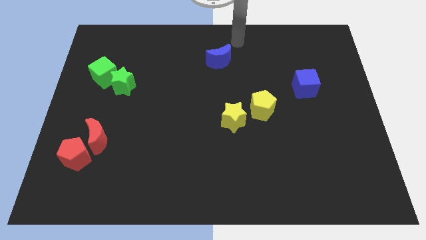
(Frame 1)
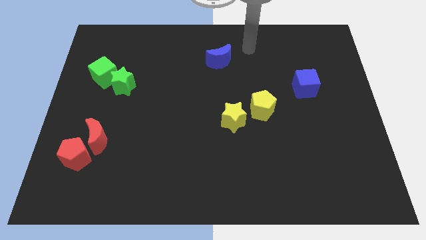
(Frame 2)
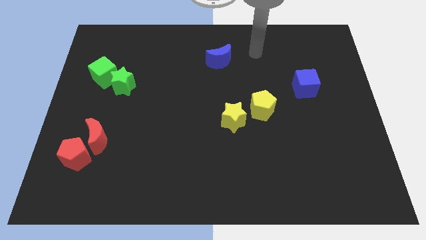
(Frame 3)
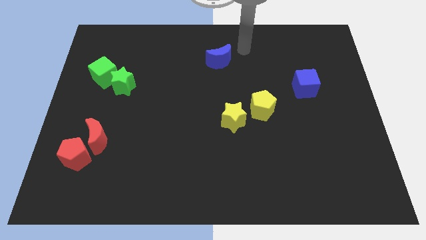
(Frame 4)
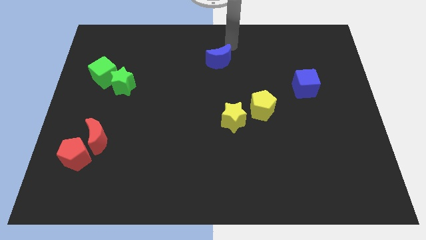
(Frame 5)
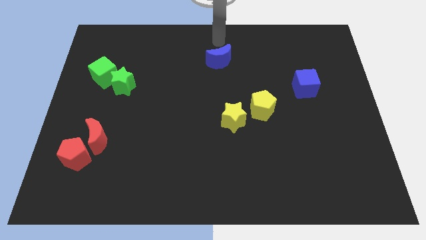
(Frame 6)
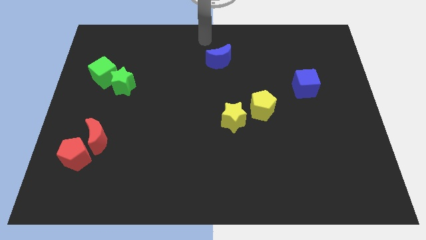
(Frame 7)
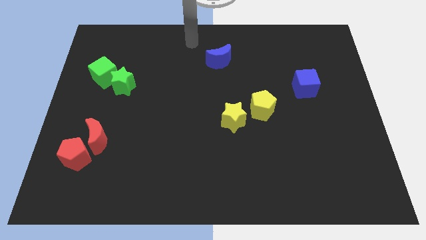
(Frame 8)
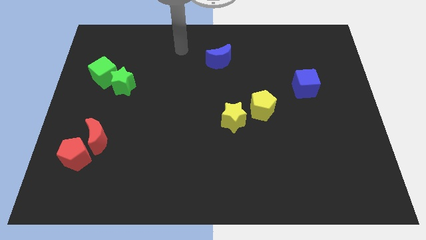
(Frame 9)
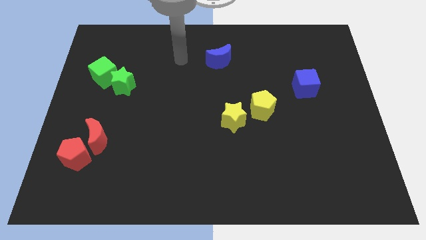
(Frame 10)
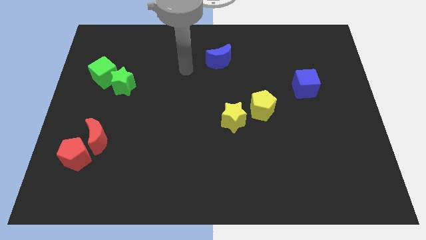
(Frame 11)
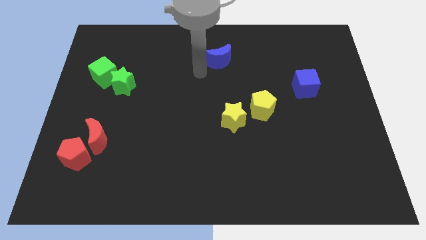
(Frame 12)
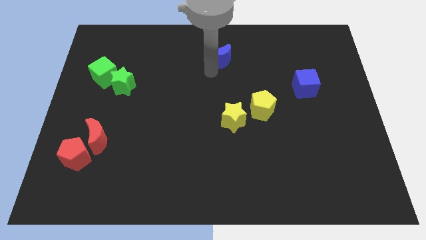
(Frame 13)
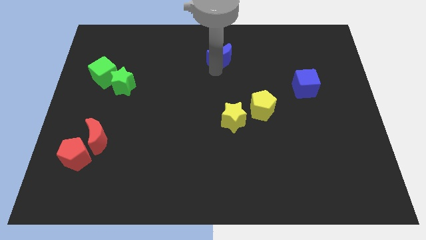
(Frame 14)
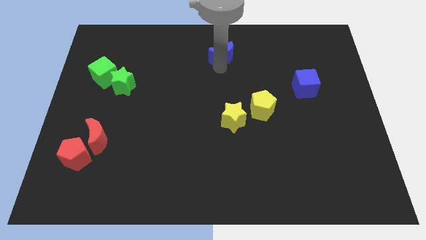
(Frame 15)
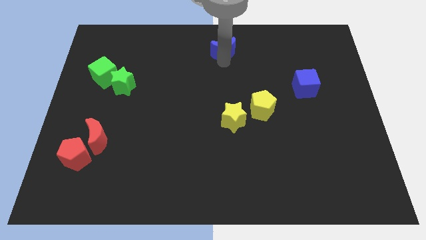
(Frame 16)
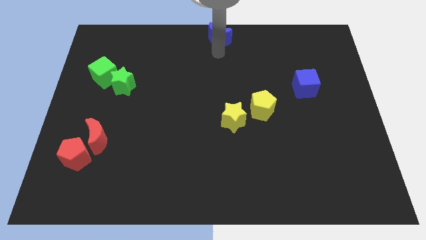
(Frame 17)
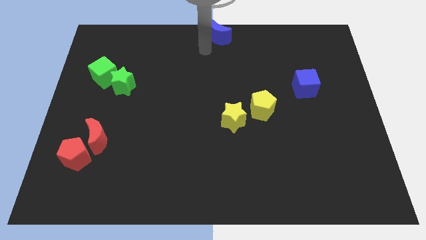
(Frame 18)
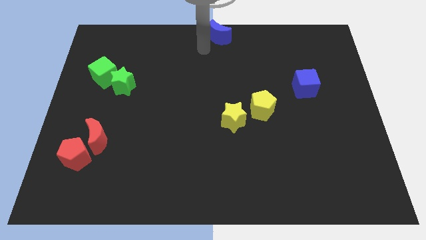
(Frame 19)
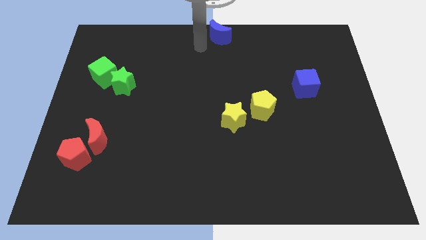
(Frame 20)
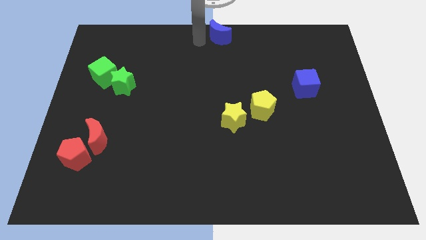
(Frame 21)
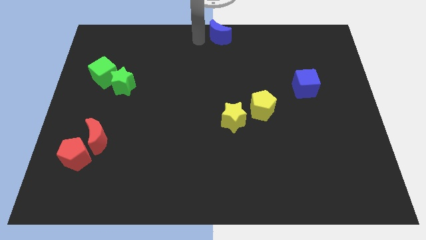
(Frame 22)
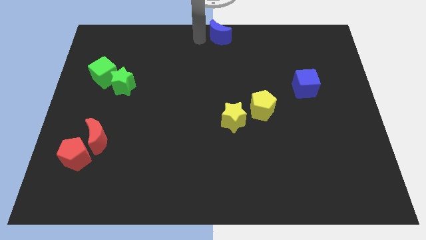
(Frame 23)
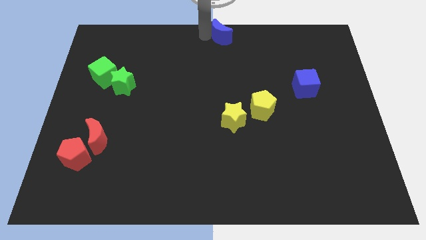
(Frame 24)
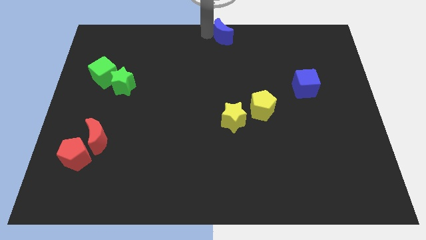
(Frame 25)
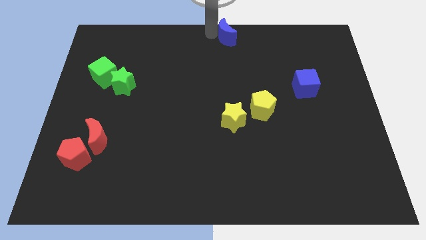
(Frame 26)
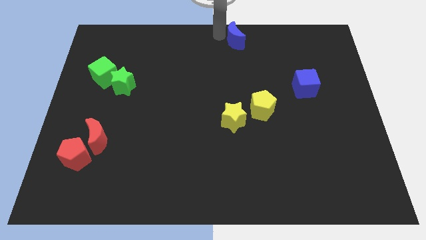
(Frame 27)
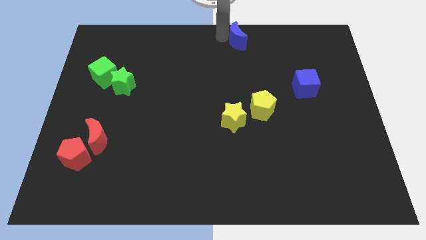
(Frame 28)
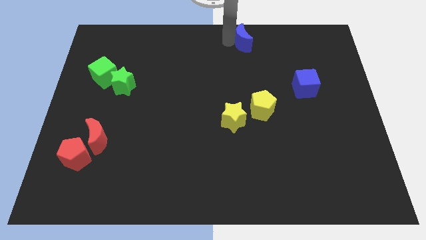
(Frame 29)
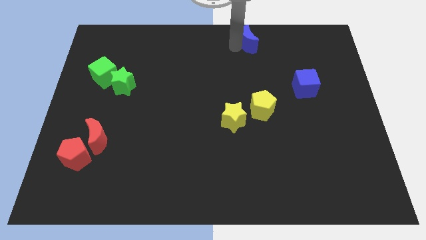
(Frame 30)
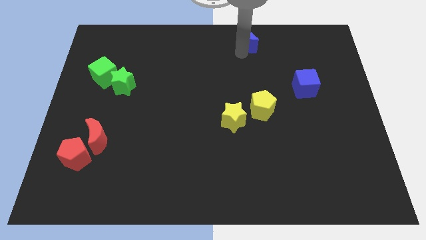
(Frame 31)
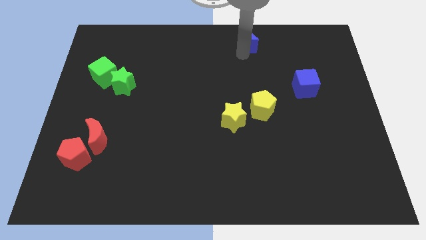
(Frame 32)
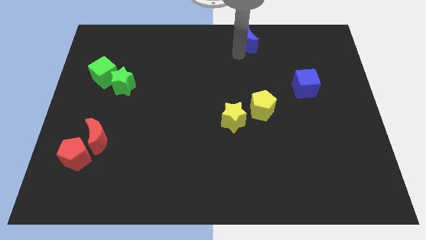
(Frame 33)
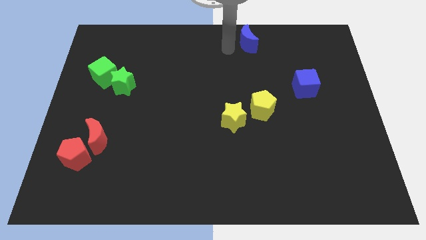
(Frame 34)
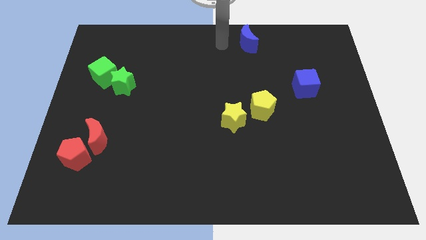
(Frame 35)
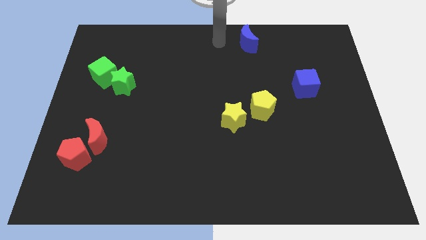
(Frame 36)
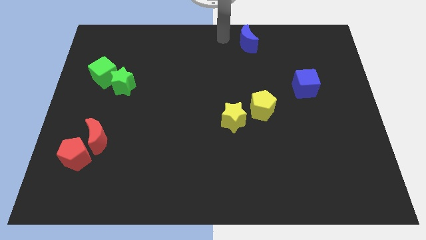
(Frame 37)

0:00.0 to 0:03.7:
place the blue moon above the yellow pentagon

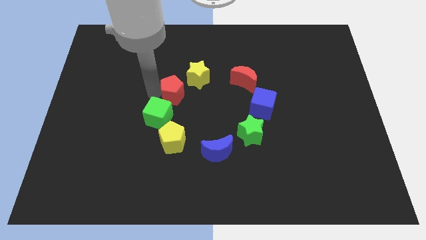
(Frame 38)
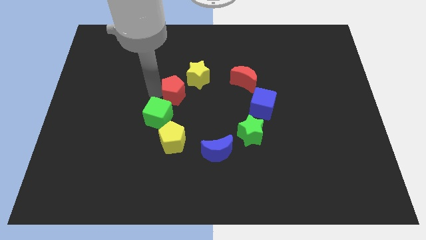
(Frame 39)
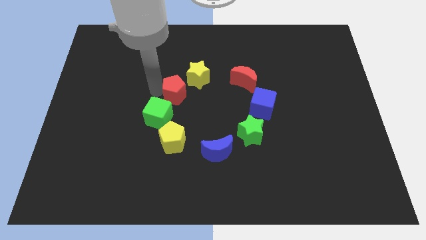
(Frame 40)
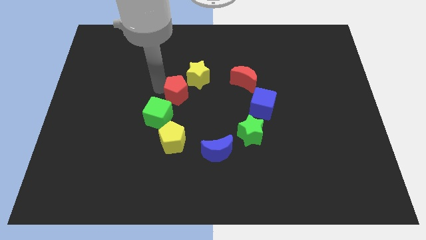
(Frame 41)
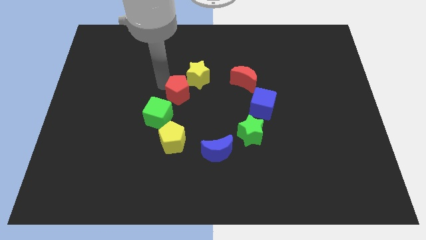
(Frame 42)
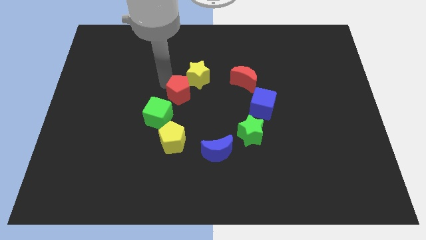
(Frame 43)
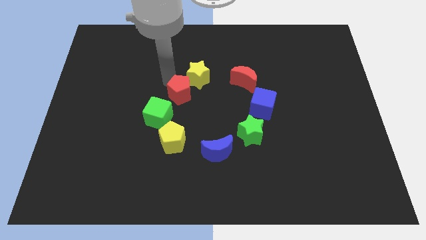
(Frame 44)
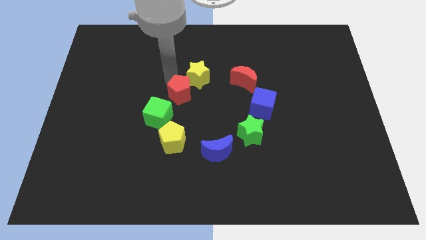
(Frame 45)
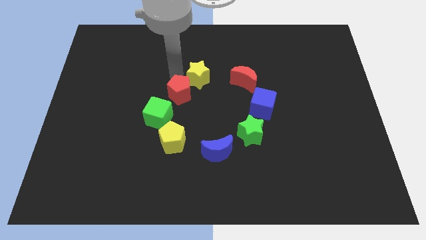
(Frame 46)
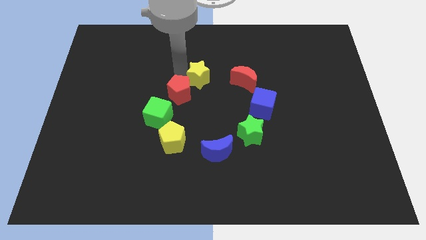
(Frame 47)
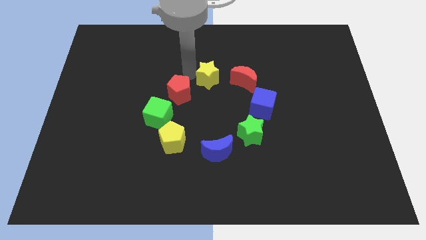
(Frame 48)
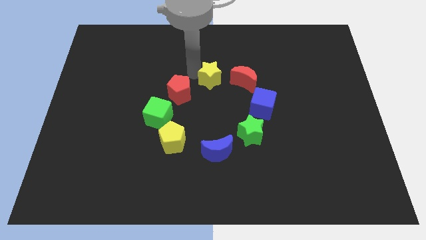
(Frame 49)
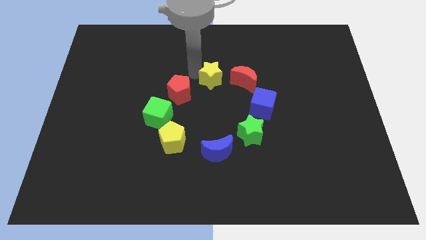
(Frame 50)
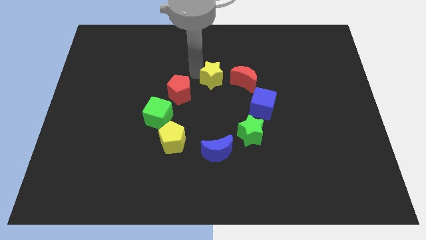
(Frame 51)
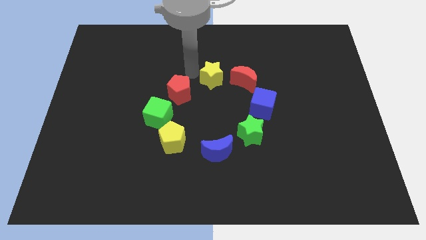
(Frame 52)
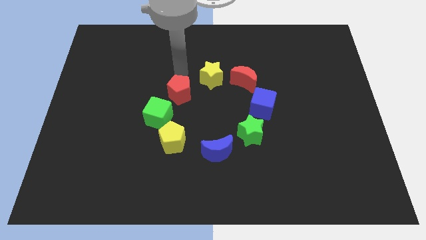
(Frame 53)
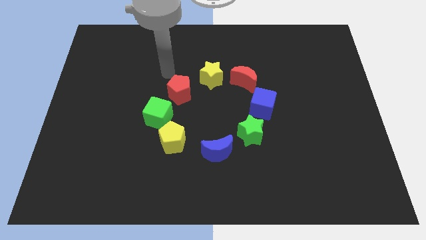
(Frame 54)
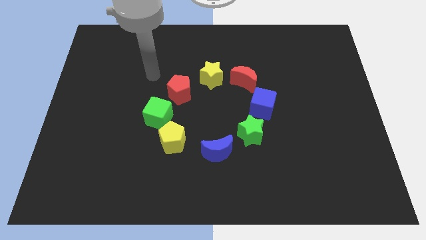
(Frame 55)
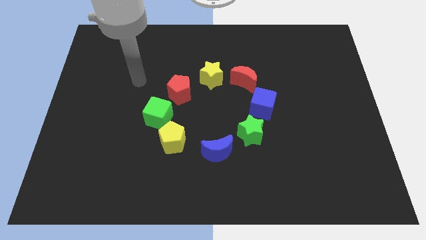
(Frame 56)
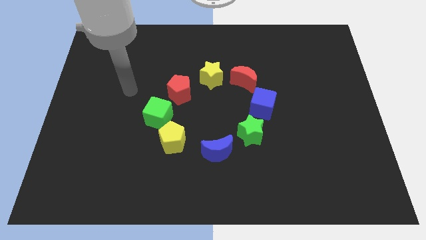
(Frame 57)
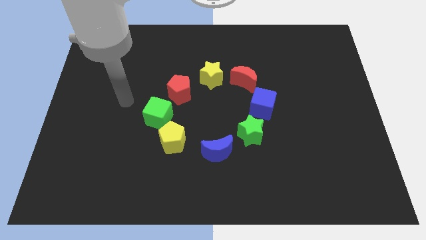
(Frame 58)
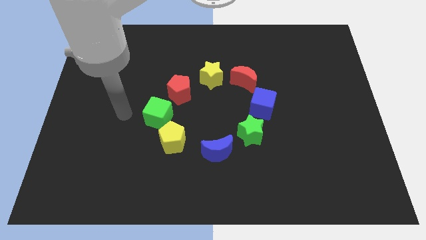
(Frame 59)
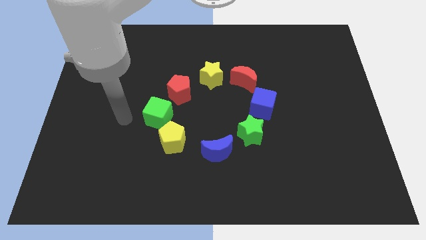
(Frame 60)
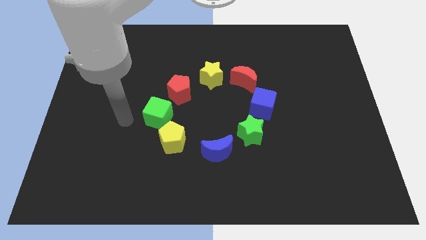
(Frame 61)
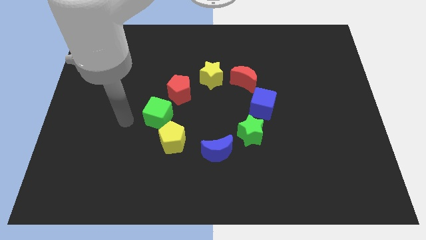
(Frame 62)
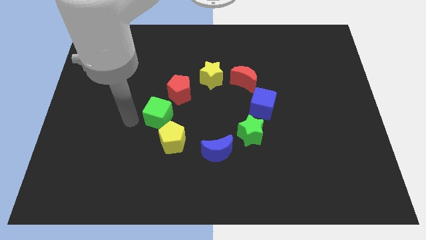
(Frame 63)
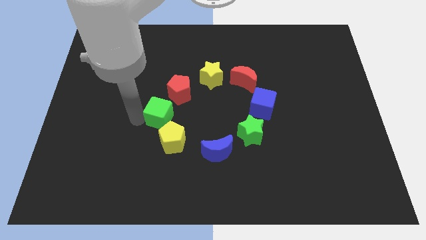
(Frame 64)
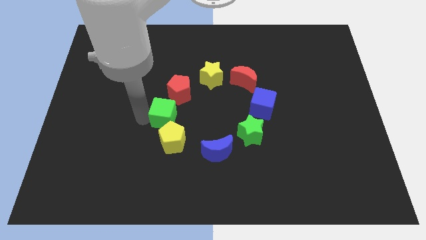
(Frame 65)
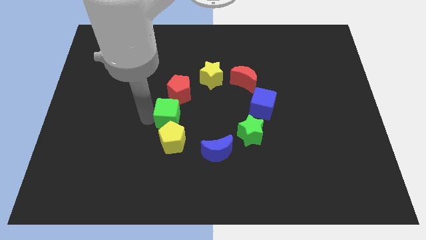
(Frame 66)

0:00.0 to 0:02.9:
move your arm to the green cube

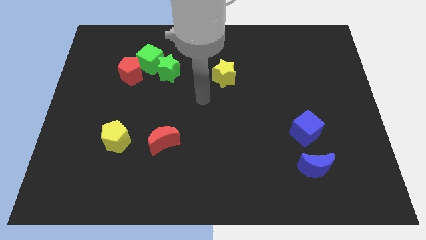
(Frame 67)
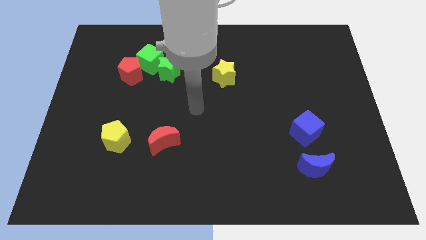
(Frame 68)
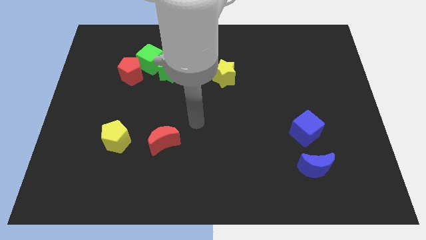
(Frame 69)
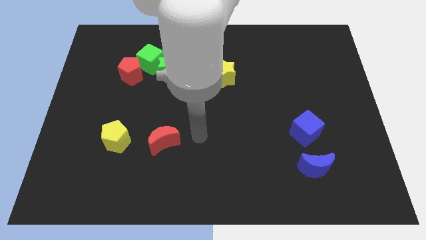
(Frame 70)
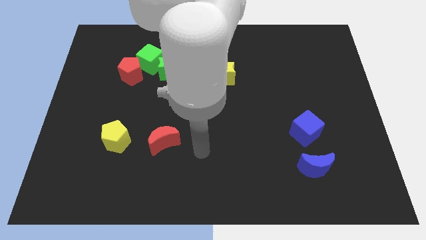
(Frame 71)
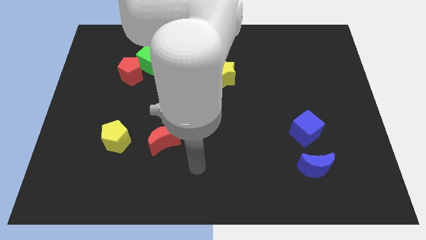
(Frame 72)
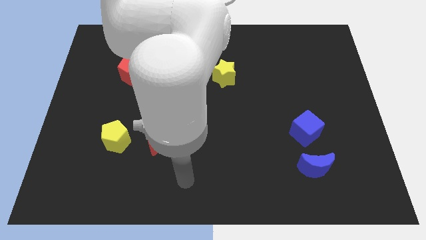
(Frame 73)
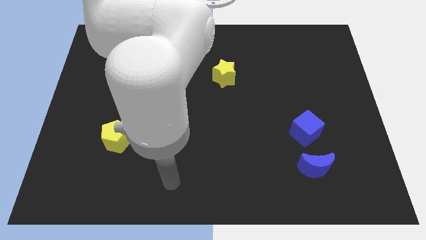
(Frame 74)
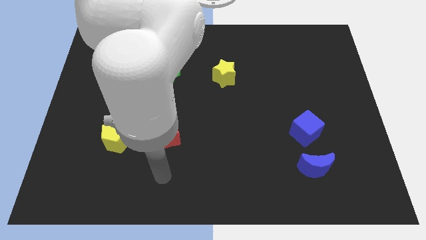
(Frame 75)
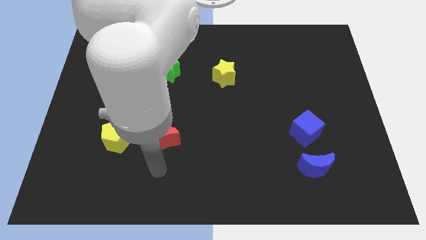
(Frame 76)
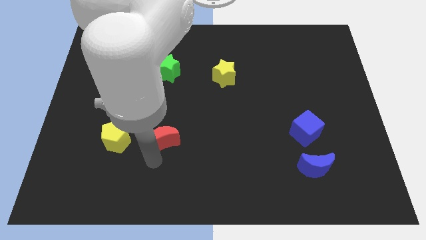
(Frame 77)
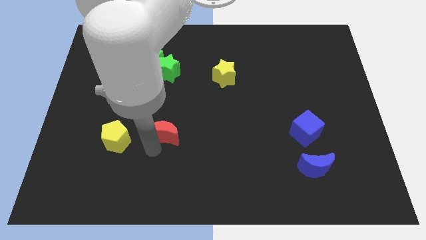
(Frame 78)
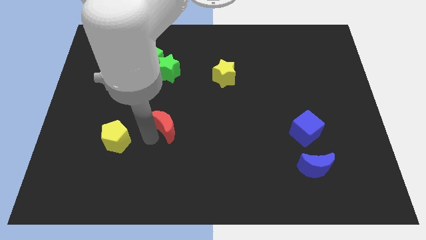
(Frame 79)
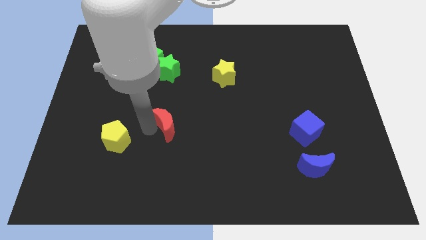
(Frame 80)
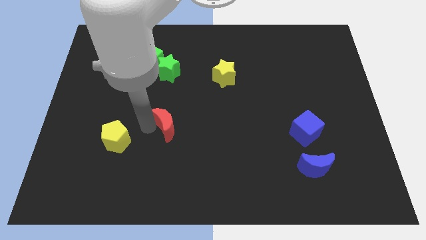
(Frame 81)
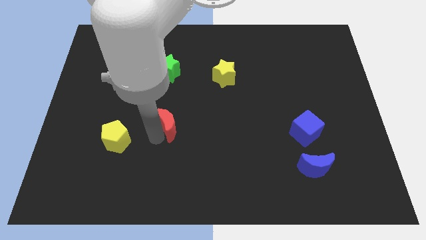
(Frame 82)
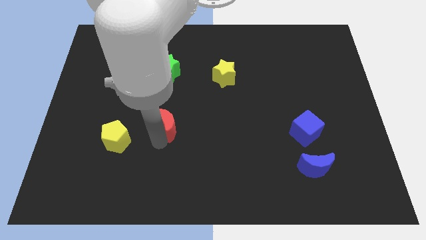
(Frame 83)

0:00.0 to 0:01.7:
place the red moon diagonally to the yellow pentagona

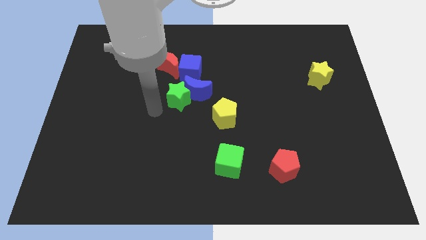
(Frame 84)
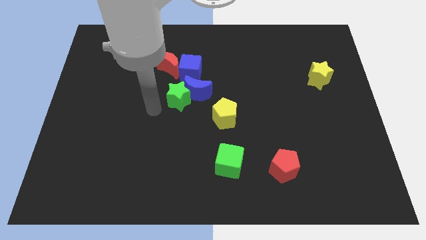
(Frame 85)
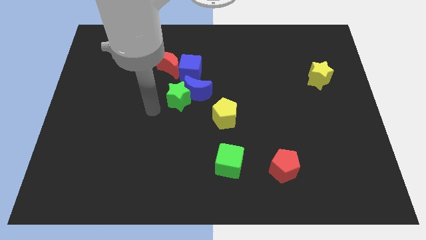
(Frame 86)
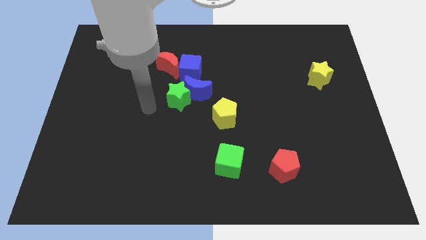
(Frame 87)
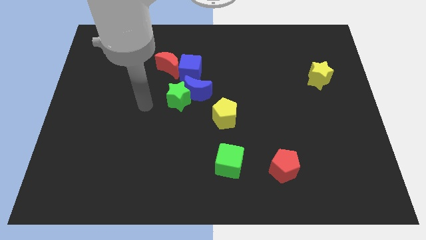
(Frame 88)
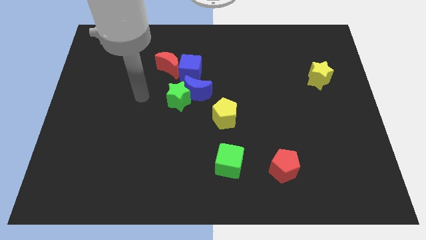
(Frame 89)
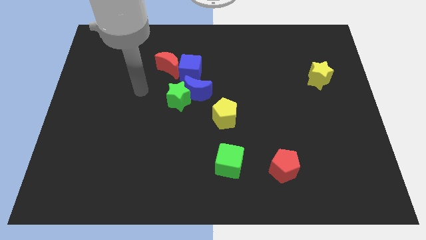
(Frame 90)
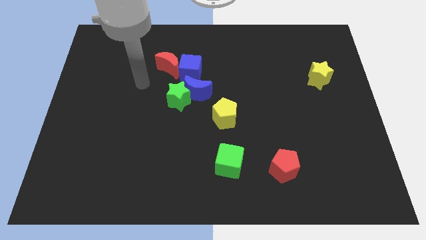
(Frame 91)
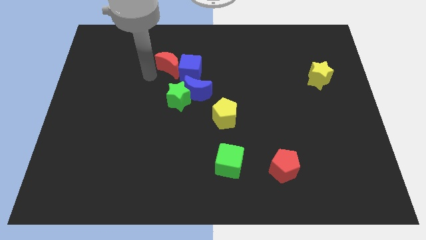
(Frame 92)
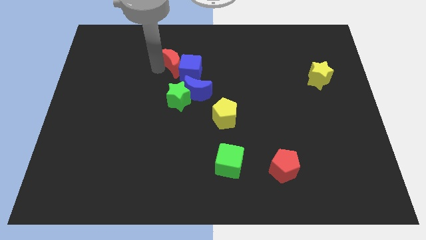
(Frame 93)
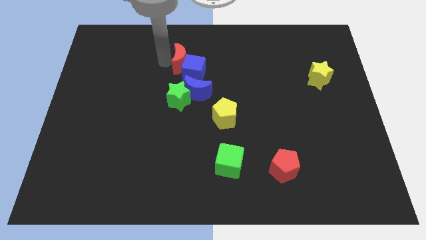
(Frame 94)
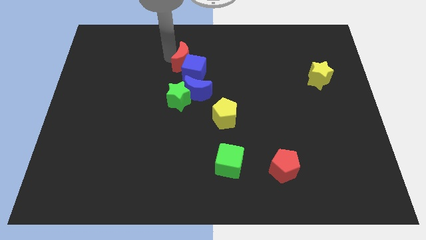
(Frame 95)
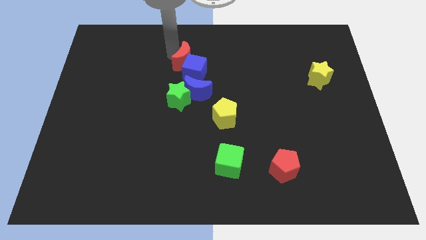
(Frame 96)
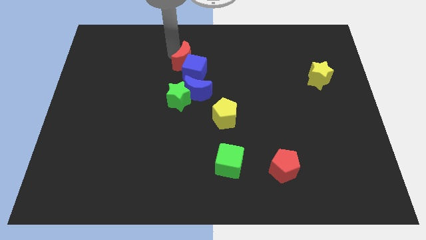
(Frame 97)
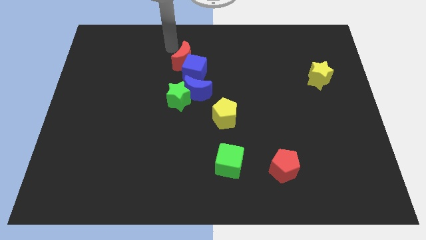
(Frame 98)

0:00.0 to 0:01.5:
push the red crescent into the blue cube
